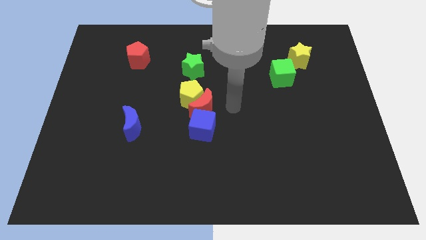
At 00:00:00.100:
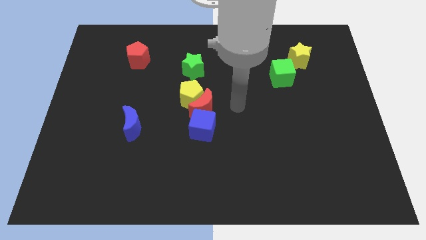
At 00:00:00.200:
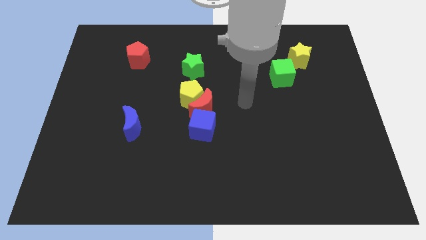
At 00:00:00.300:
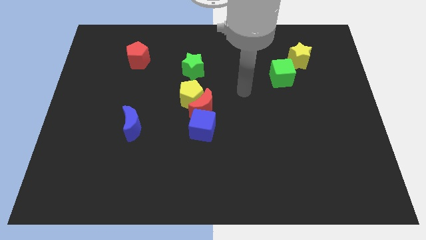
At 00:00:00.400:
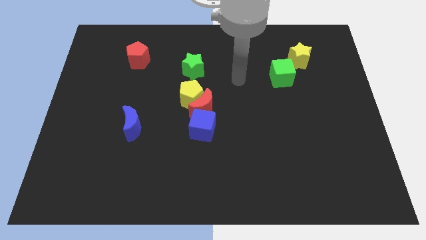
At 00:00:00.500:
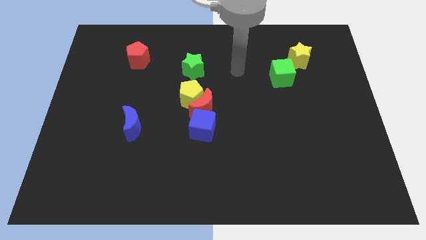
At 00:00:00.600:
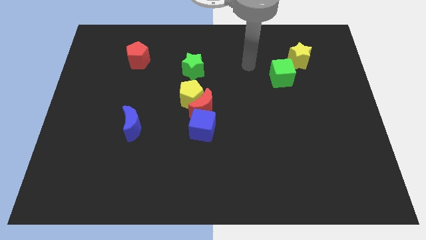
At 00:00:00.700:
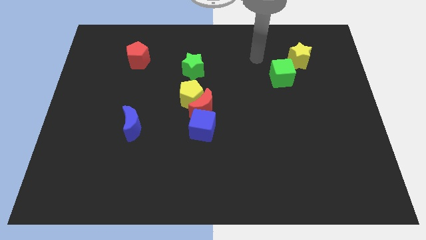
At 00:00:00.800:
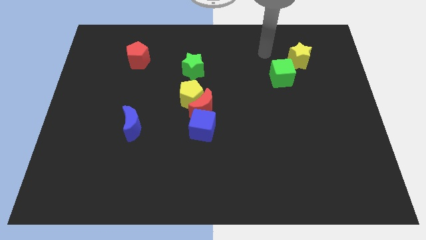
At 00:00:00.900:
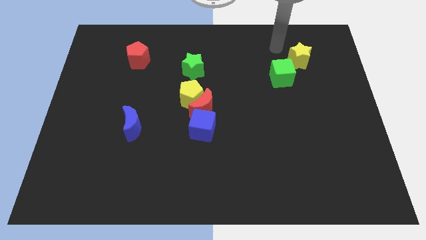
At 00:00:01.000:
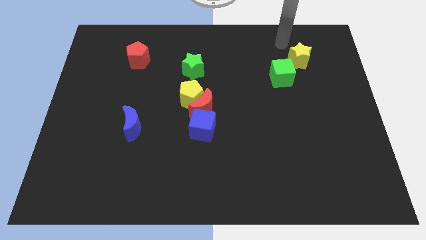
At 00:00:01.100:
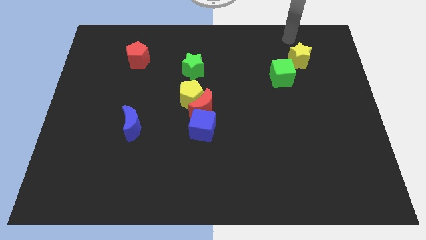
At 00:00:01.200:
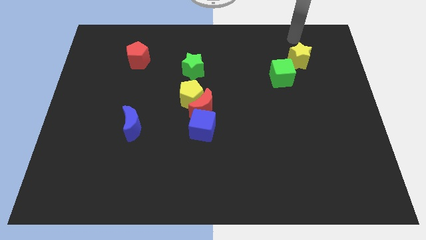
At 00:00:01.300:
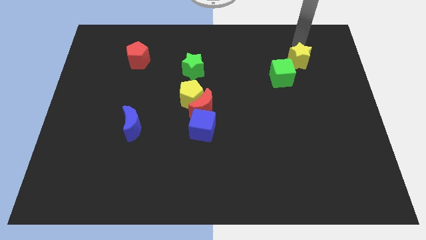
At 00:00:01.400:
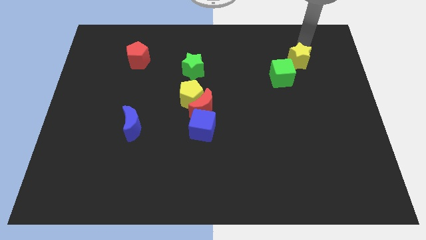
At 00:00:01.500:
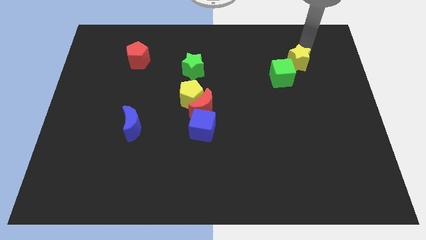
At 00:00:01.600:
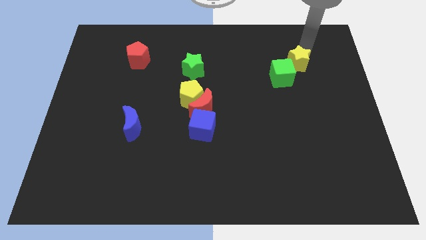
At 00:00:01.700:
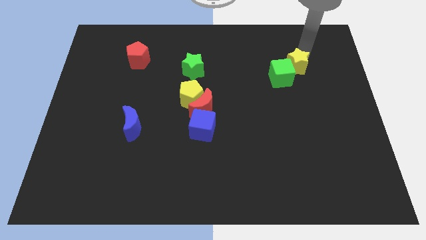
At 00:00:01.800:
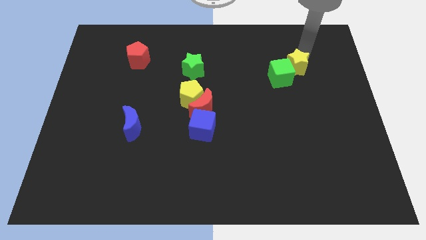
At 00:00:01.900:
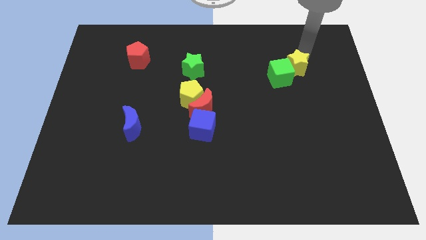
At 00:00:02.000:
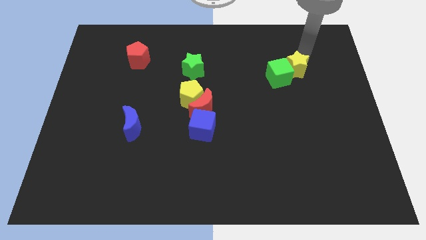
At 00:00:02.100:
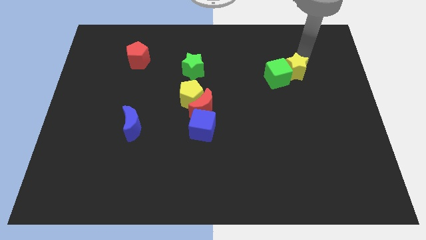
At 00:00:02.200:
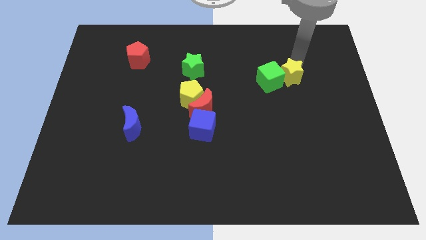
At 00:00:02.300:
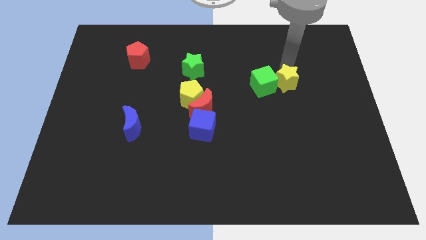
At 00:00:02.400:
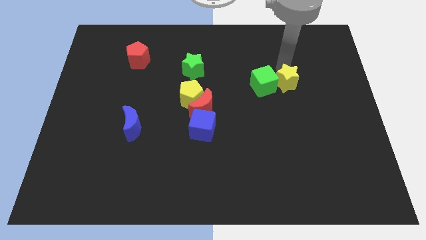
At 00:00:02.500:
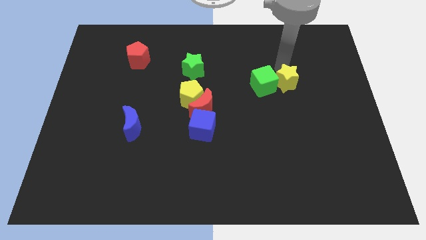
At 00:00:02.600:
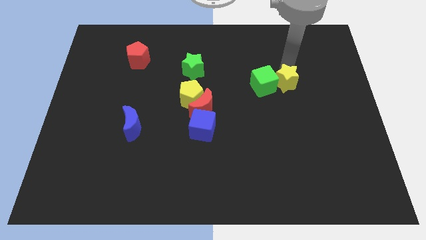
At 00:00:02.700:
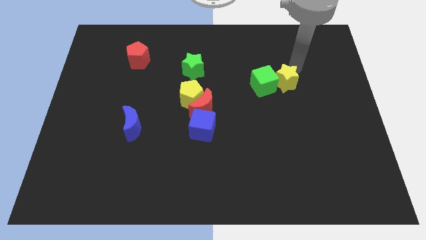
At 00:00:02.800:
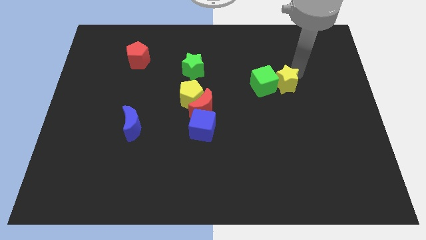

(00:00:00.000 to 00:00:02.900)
put the yellow star into the green cube

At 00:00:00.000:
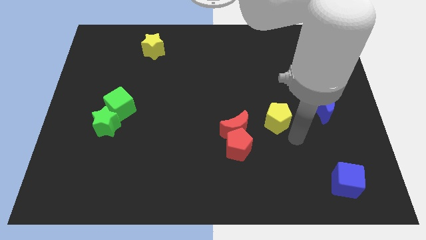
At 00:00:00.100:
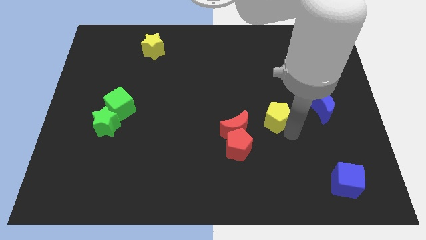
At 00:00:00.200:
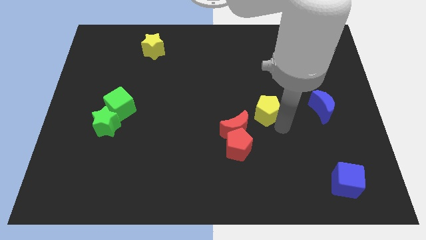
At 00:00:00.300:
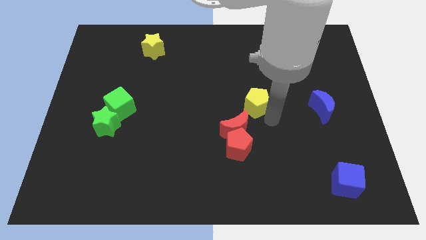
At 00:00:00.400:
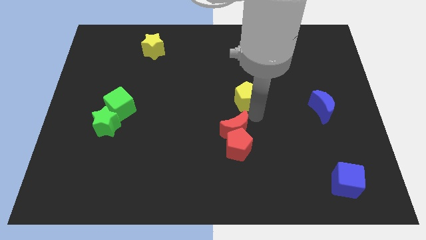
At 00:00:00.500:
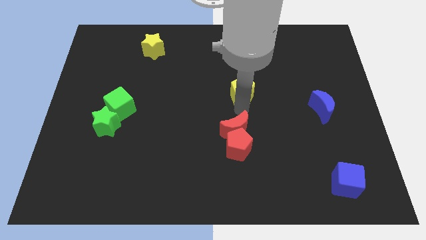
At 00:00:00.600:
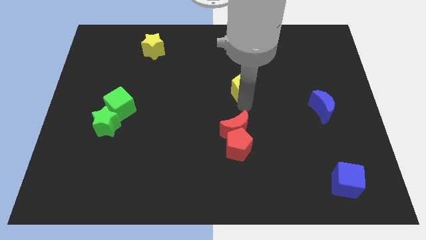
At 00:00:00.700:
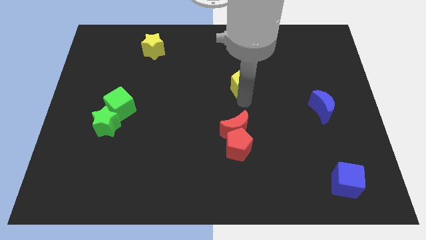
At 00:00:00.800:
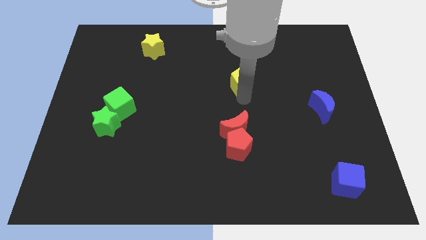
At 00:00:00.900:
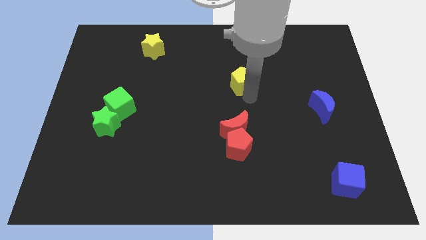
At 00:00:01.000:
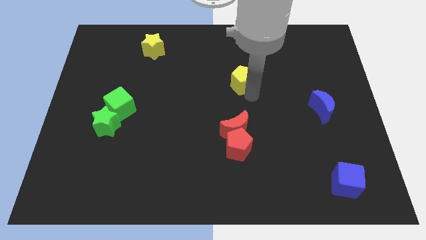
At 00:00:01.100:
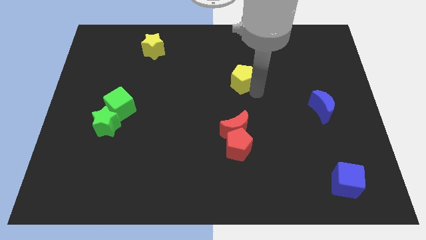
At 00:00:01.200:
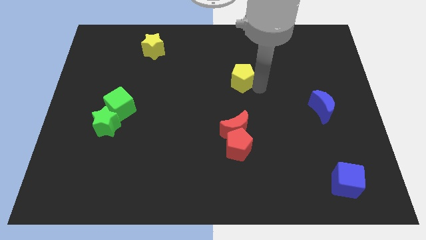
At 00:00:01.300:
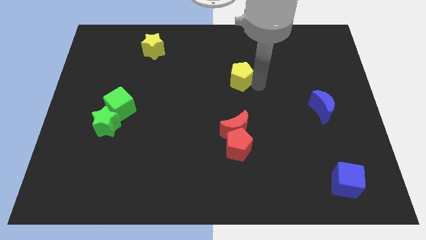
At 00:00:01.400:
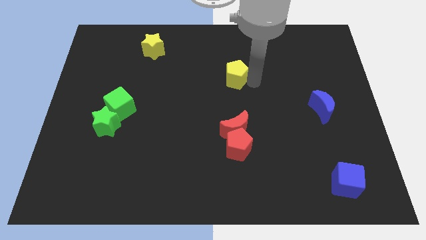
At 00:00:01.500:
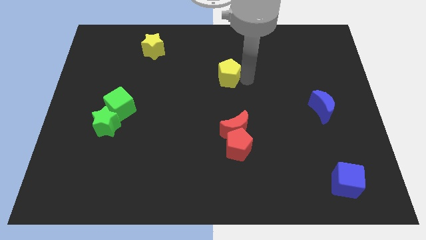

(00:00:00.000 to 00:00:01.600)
place the yellow pentagon above the red blocks

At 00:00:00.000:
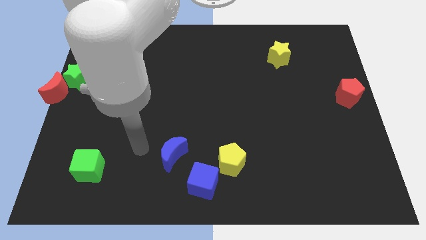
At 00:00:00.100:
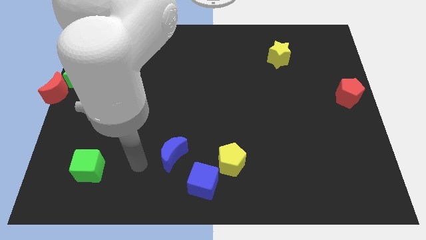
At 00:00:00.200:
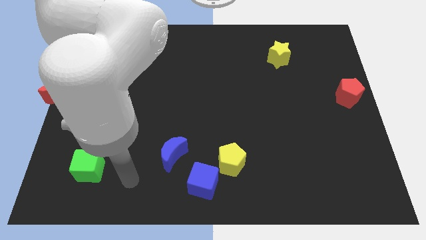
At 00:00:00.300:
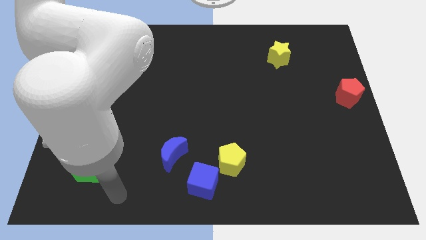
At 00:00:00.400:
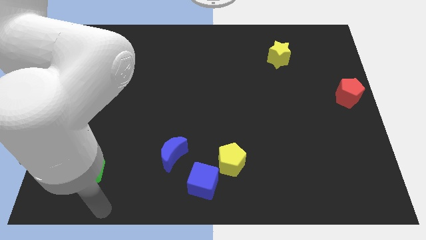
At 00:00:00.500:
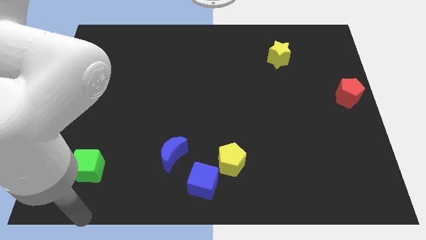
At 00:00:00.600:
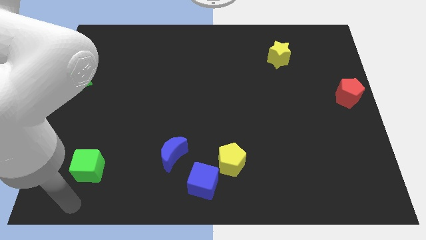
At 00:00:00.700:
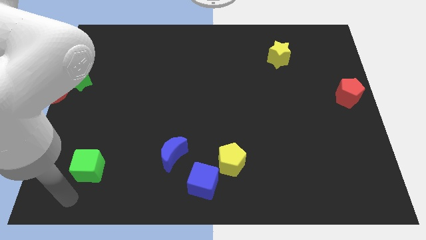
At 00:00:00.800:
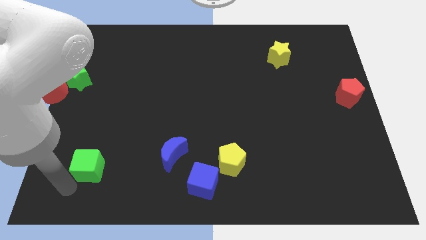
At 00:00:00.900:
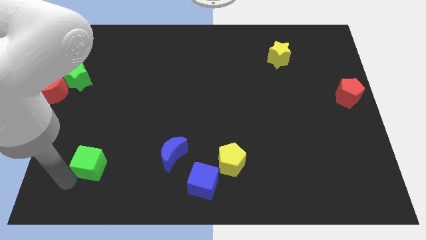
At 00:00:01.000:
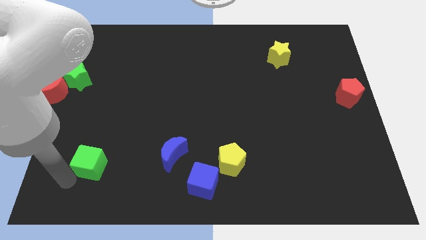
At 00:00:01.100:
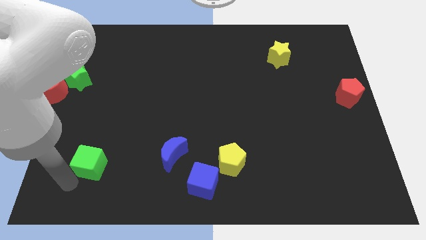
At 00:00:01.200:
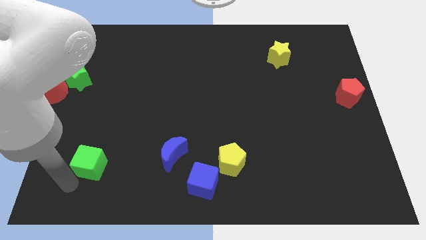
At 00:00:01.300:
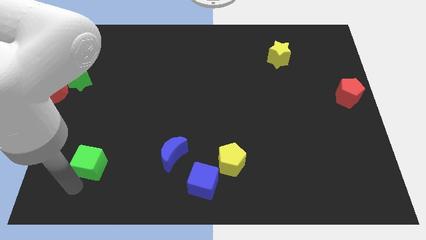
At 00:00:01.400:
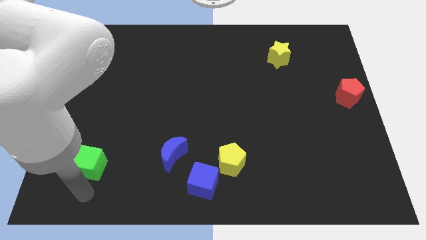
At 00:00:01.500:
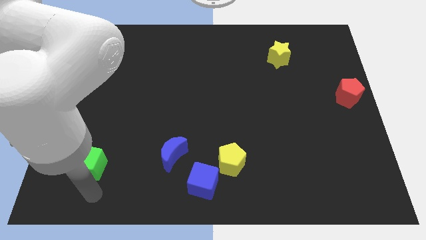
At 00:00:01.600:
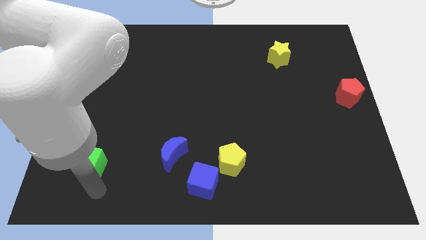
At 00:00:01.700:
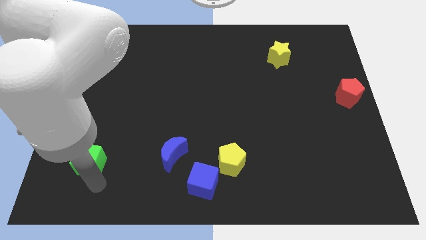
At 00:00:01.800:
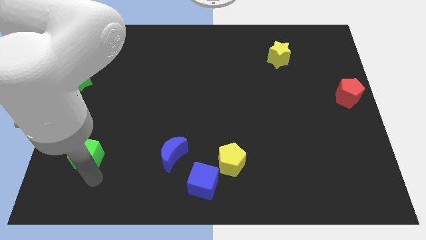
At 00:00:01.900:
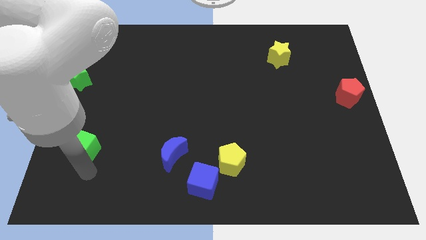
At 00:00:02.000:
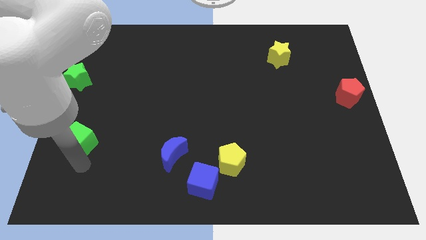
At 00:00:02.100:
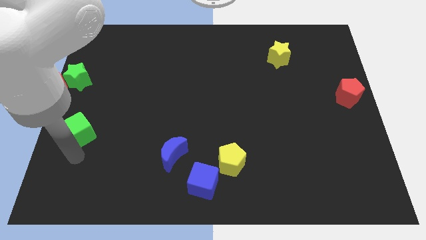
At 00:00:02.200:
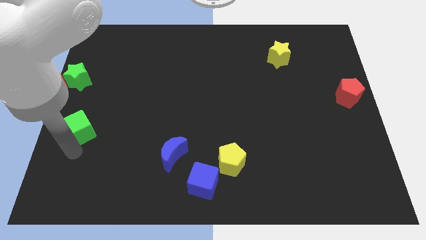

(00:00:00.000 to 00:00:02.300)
slide the green cube towards the red moon

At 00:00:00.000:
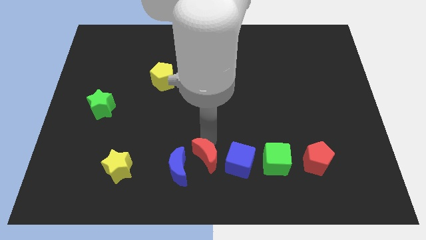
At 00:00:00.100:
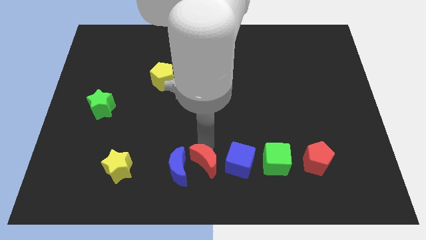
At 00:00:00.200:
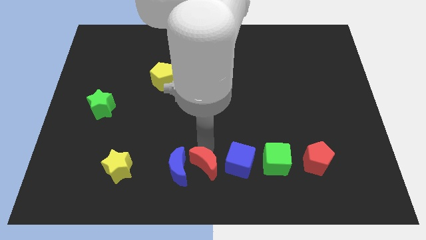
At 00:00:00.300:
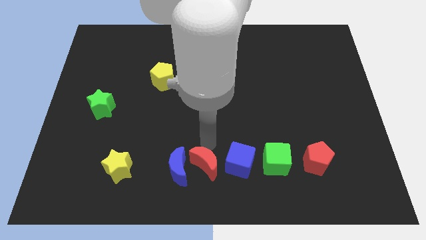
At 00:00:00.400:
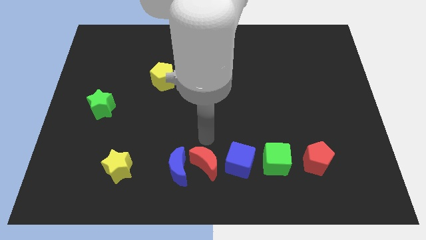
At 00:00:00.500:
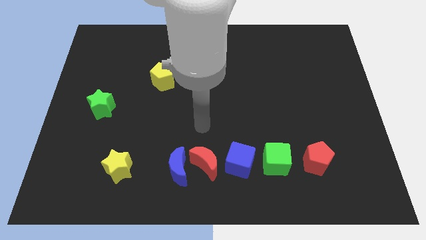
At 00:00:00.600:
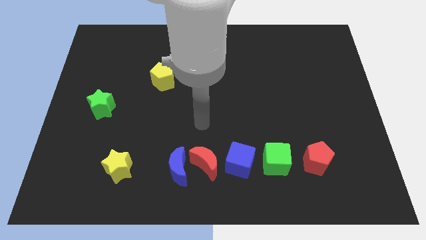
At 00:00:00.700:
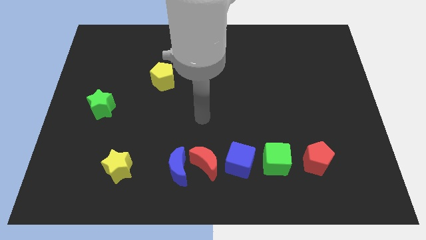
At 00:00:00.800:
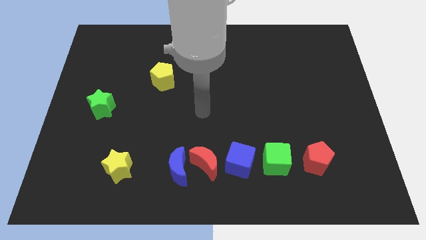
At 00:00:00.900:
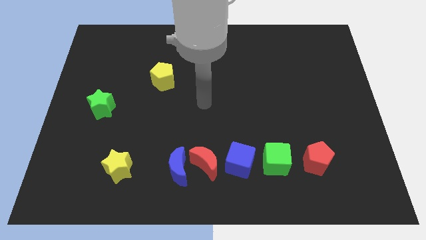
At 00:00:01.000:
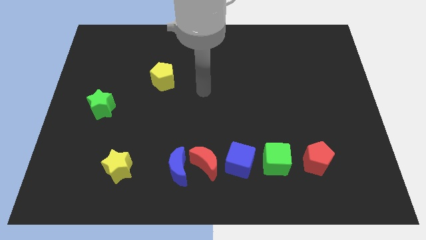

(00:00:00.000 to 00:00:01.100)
adjust the blue crescent to the right of the blue crescent

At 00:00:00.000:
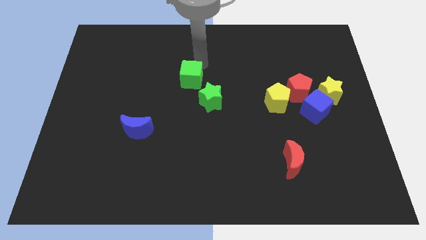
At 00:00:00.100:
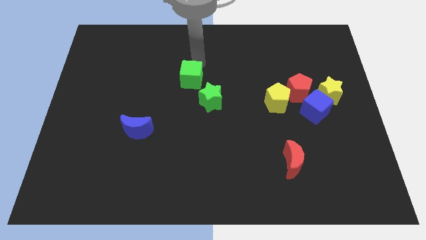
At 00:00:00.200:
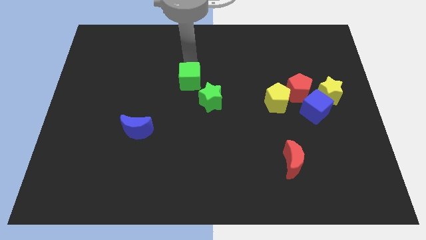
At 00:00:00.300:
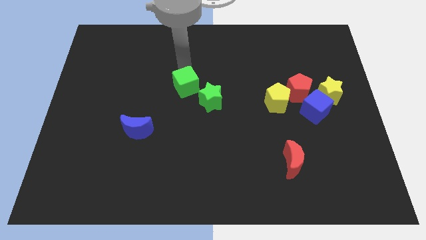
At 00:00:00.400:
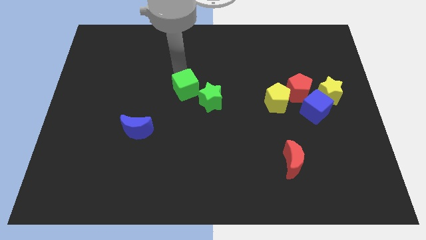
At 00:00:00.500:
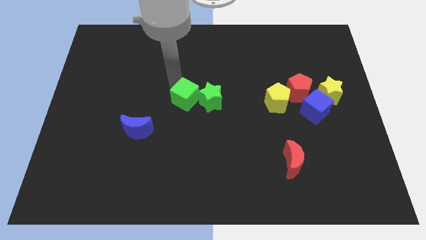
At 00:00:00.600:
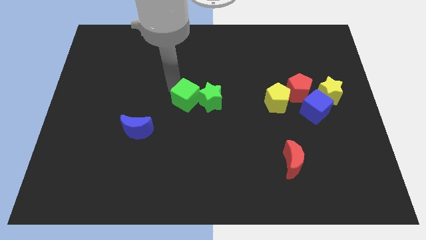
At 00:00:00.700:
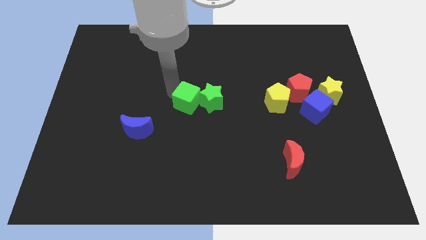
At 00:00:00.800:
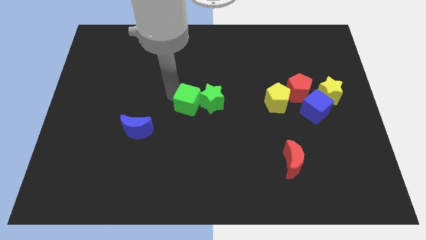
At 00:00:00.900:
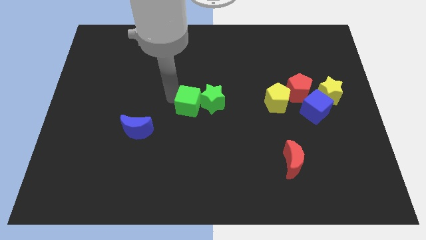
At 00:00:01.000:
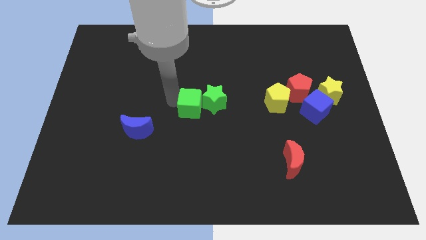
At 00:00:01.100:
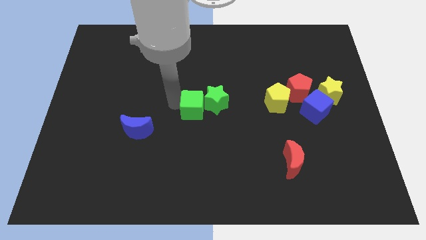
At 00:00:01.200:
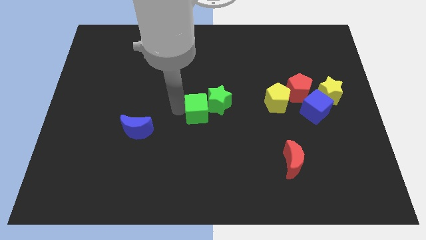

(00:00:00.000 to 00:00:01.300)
push the green cube to the center of the board
